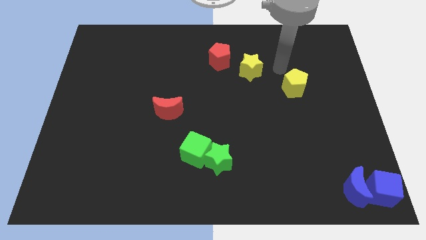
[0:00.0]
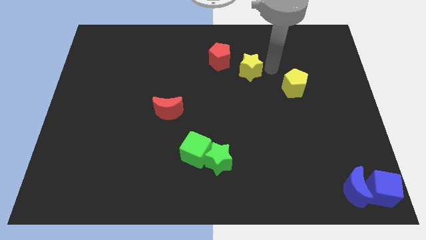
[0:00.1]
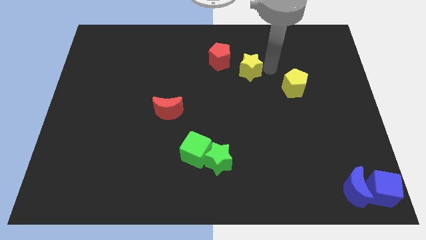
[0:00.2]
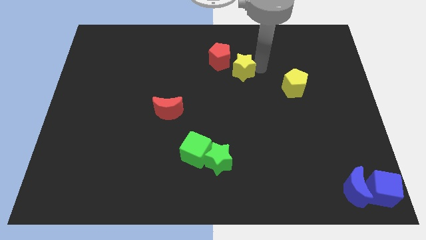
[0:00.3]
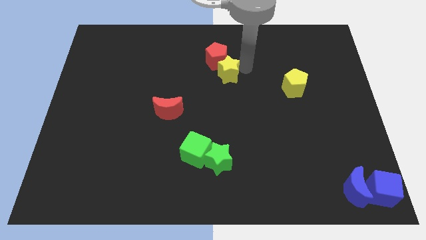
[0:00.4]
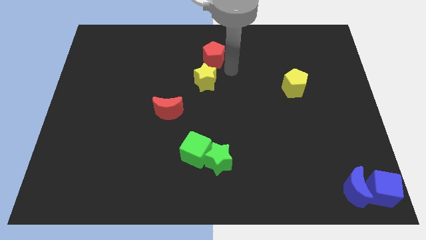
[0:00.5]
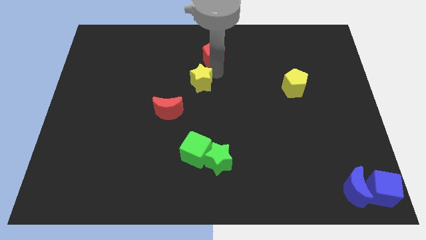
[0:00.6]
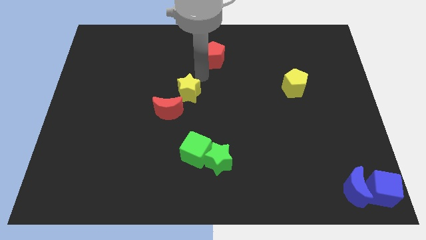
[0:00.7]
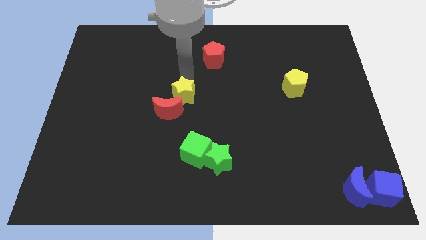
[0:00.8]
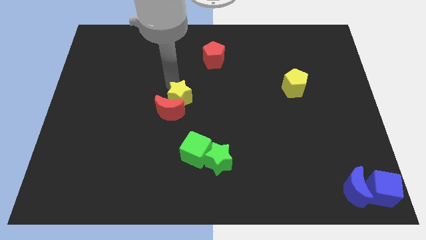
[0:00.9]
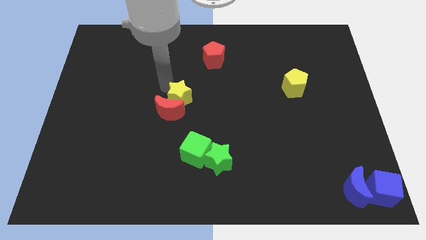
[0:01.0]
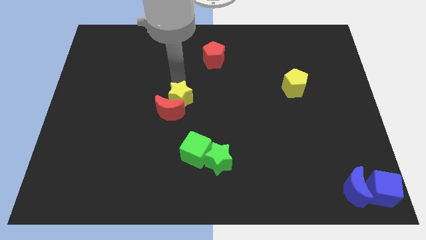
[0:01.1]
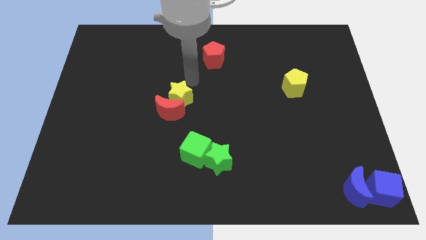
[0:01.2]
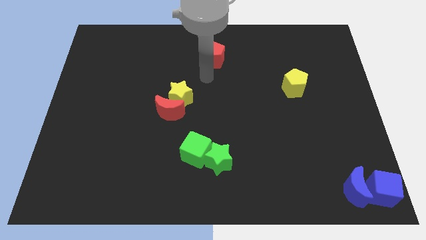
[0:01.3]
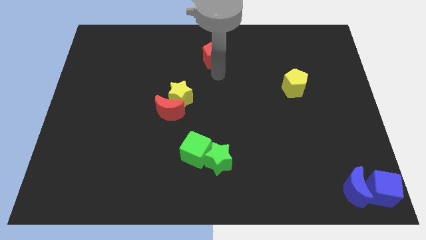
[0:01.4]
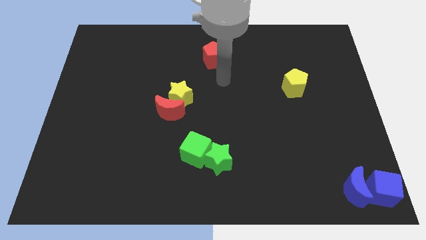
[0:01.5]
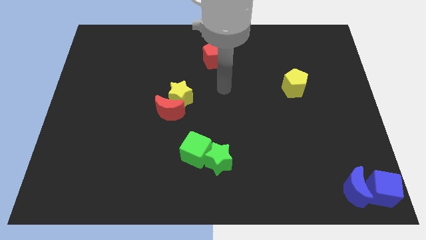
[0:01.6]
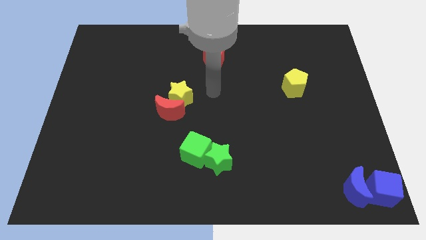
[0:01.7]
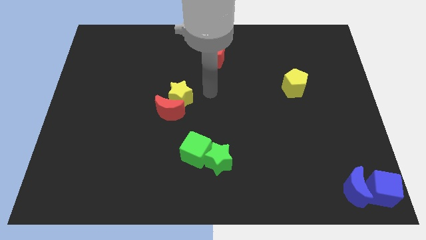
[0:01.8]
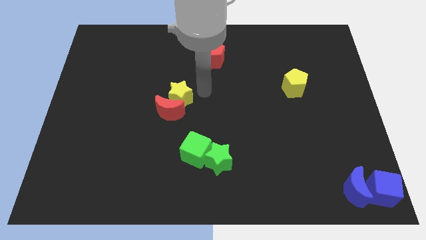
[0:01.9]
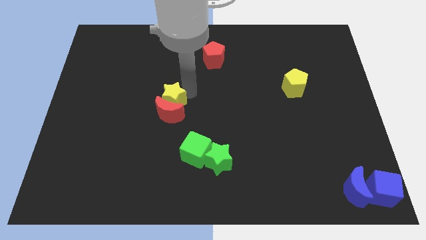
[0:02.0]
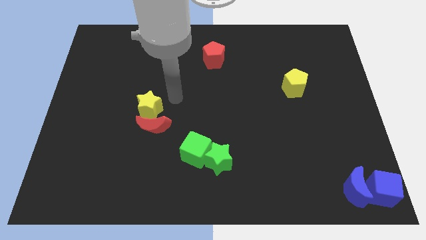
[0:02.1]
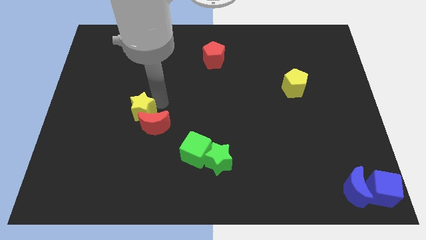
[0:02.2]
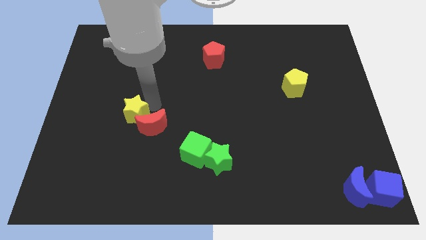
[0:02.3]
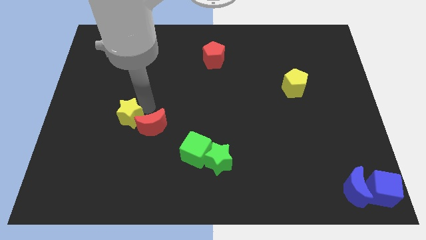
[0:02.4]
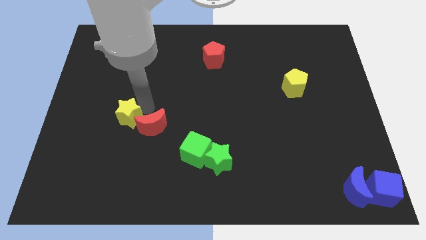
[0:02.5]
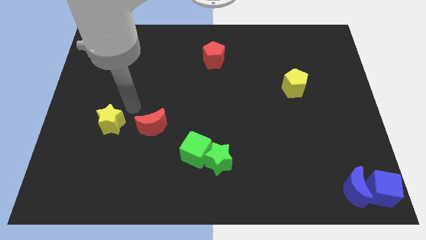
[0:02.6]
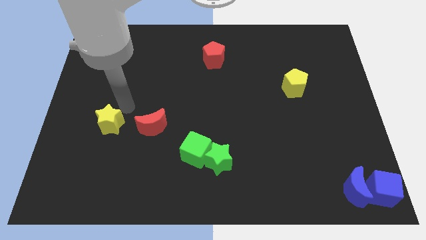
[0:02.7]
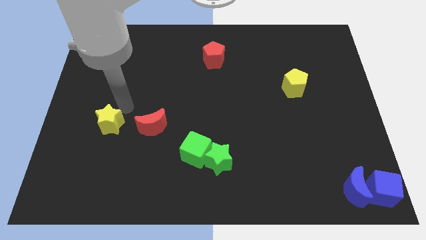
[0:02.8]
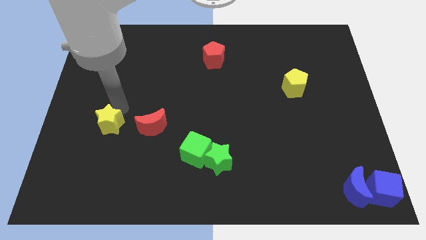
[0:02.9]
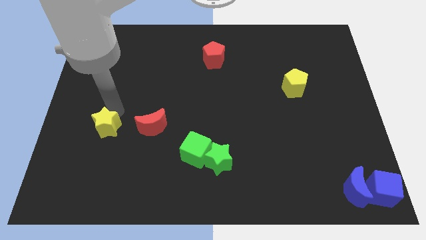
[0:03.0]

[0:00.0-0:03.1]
move yellow star to the left of red moon

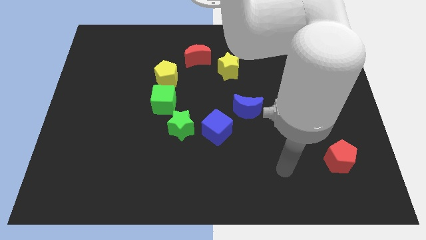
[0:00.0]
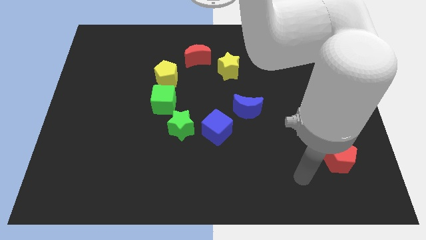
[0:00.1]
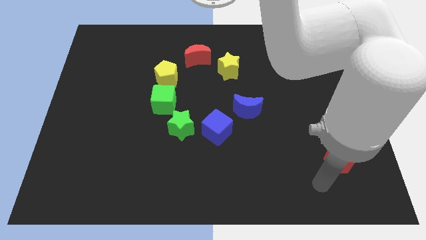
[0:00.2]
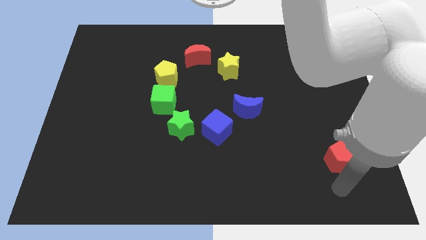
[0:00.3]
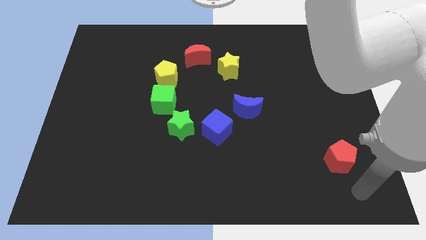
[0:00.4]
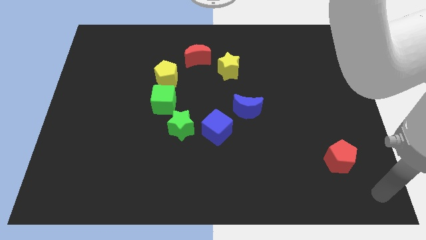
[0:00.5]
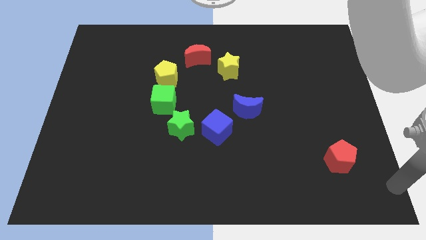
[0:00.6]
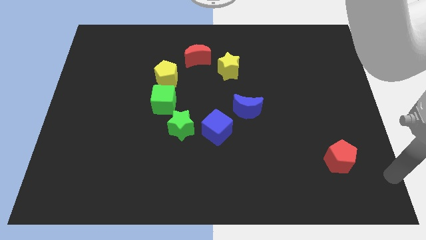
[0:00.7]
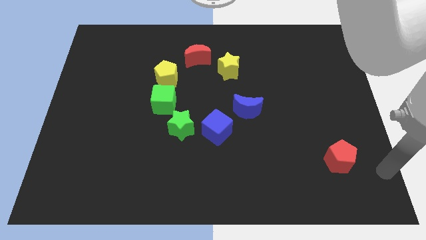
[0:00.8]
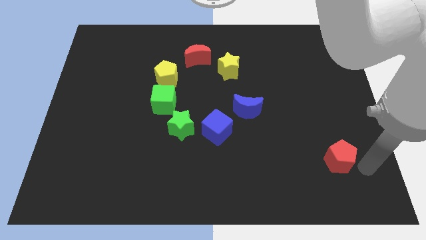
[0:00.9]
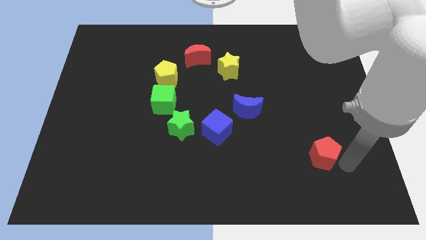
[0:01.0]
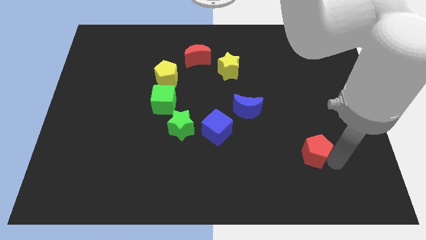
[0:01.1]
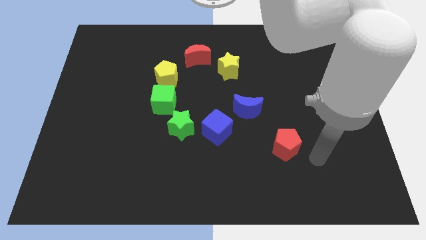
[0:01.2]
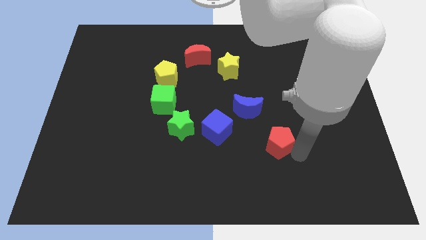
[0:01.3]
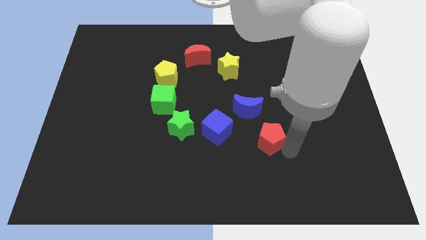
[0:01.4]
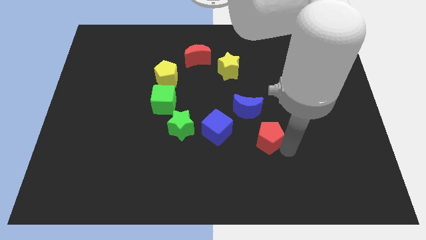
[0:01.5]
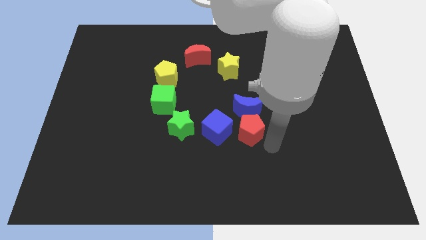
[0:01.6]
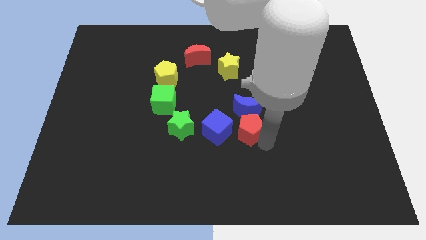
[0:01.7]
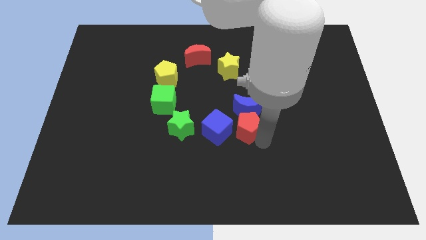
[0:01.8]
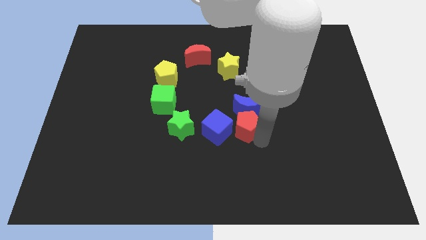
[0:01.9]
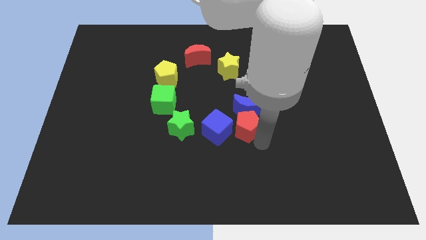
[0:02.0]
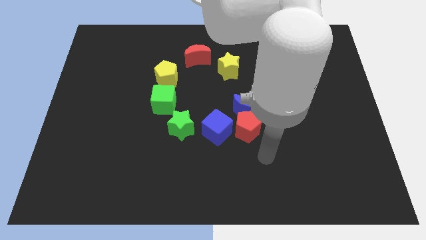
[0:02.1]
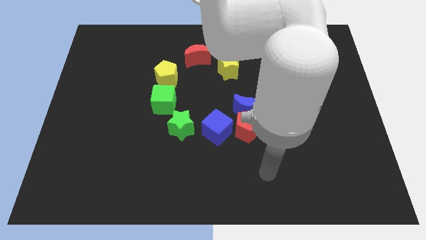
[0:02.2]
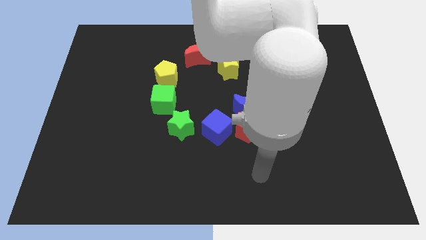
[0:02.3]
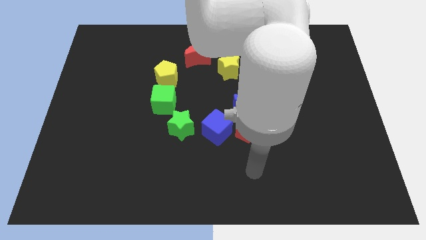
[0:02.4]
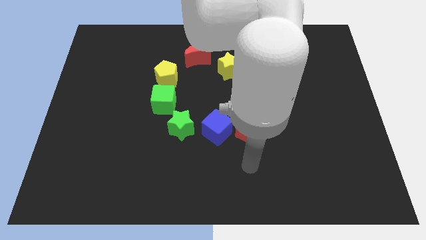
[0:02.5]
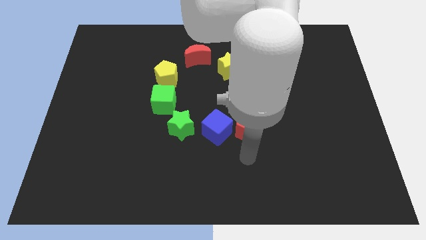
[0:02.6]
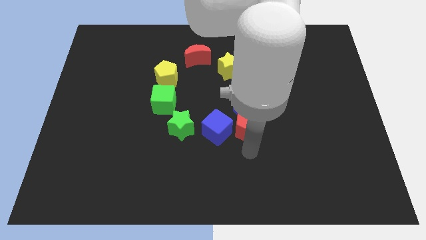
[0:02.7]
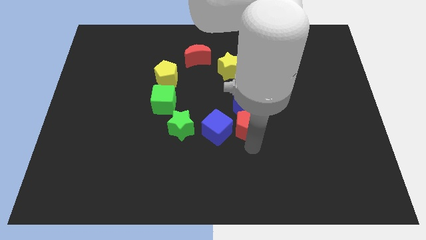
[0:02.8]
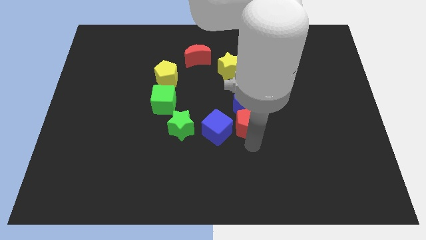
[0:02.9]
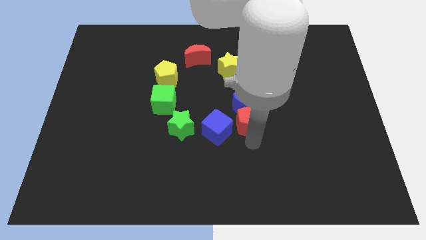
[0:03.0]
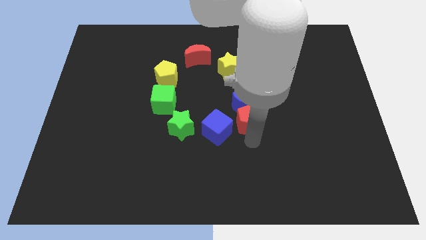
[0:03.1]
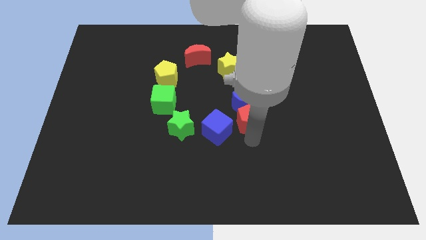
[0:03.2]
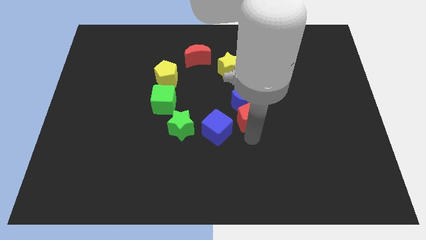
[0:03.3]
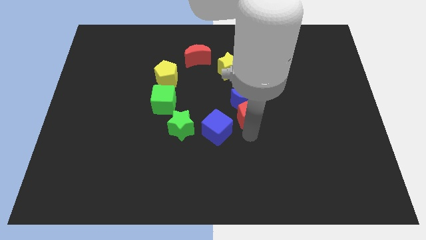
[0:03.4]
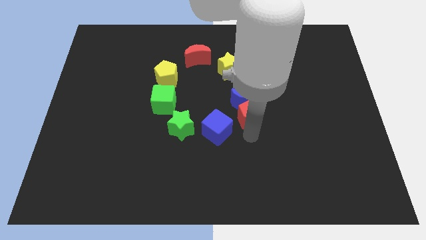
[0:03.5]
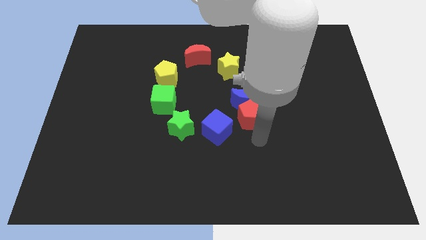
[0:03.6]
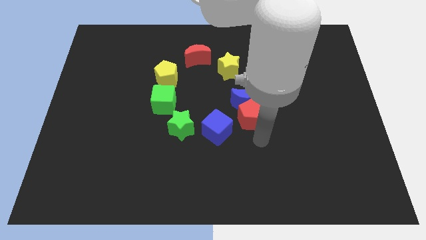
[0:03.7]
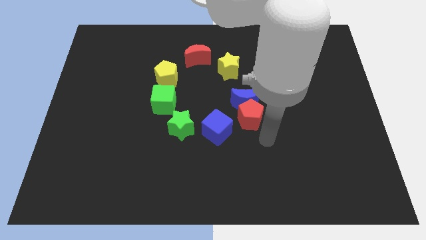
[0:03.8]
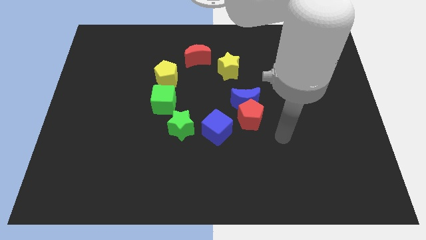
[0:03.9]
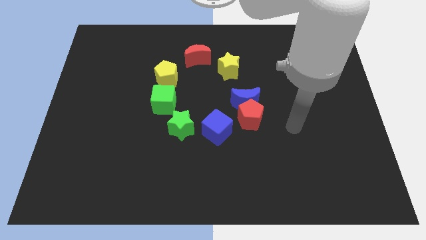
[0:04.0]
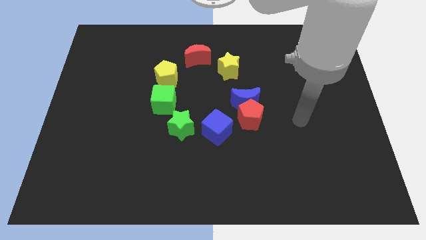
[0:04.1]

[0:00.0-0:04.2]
push the red pentagon into the blue crescent

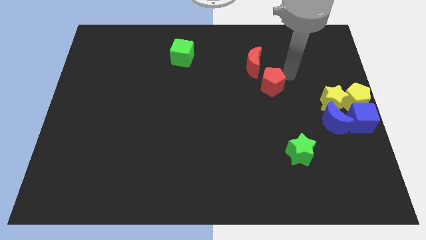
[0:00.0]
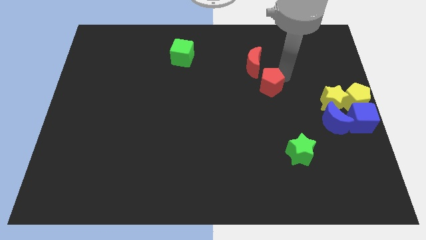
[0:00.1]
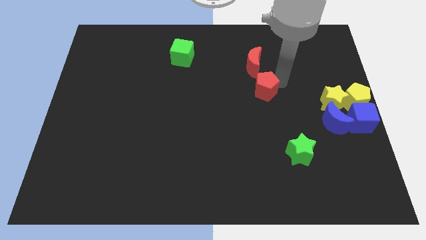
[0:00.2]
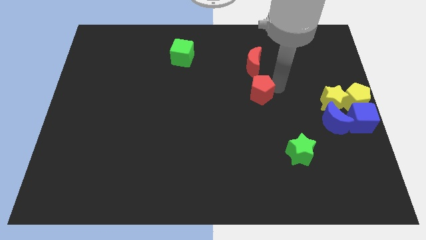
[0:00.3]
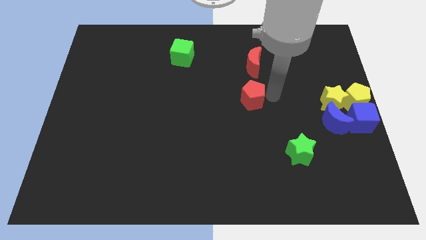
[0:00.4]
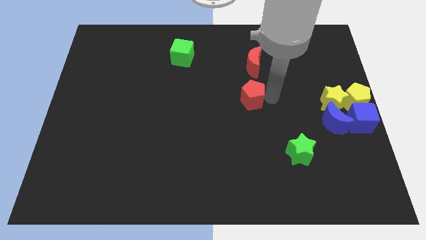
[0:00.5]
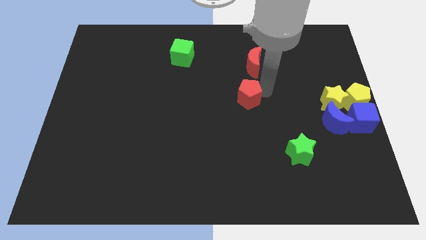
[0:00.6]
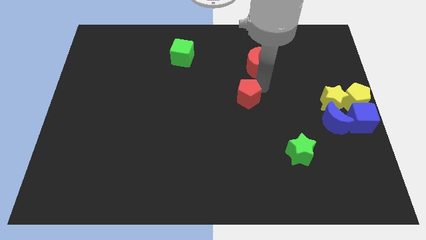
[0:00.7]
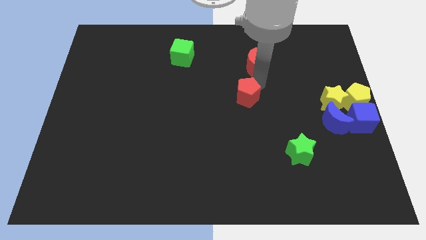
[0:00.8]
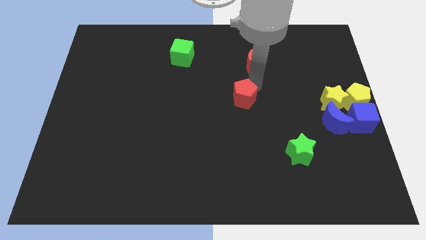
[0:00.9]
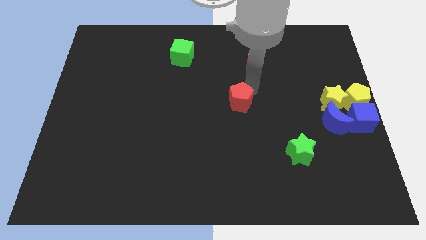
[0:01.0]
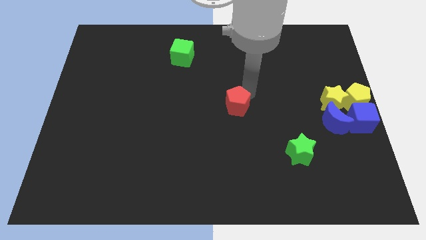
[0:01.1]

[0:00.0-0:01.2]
push the red pentagon diagonally to the bottom of the red moon

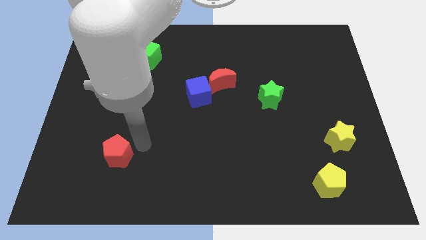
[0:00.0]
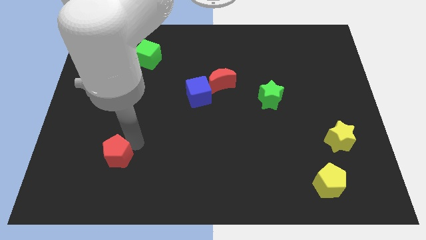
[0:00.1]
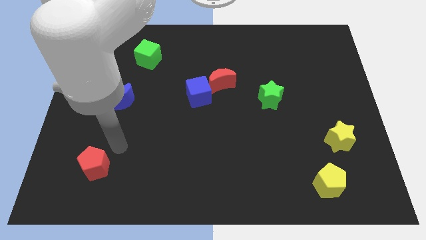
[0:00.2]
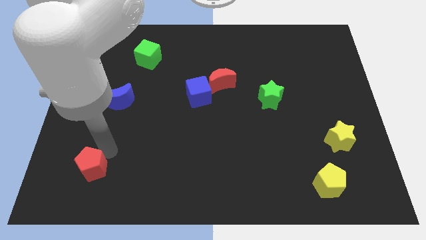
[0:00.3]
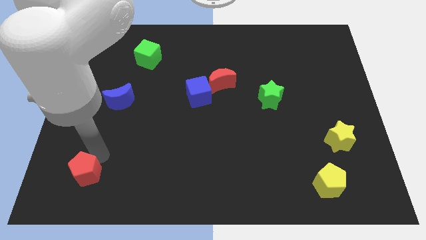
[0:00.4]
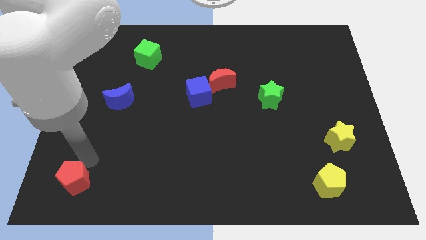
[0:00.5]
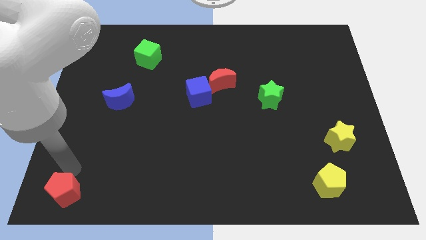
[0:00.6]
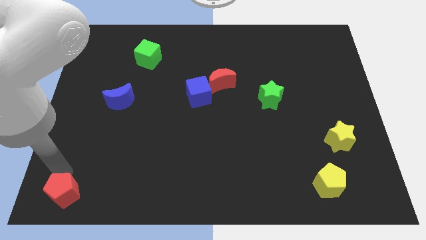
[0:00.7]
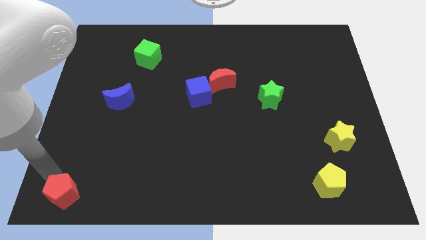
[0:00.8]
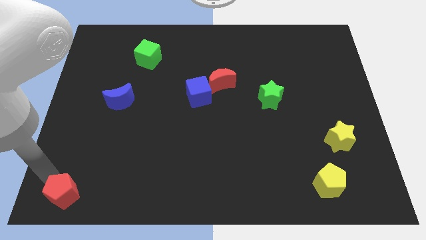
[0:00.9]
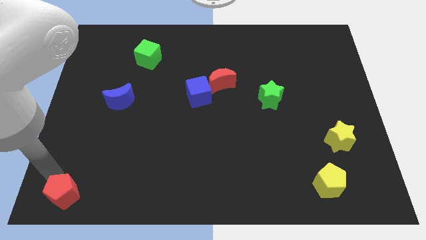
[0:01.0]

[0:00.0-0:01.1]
push red pentagon towards bottom left
